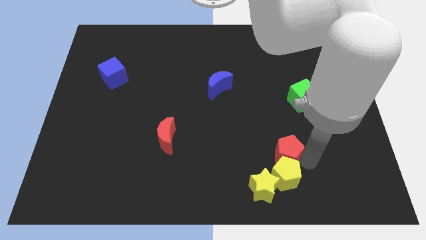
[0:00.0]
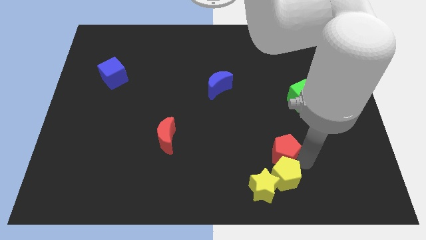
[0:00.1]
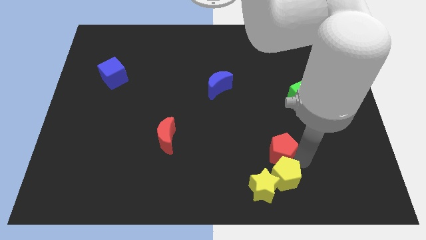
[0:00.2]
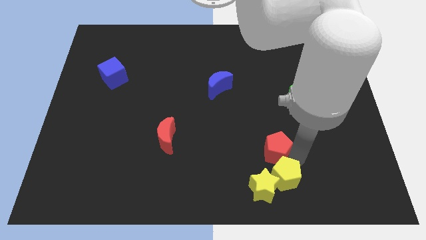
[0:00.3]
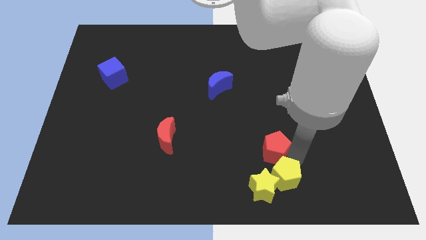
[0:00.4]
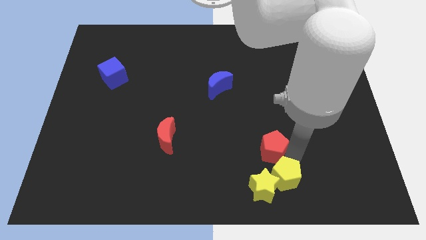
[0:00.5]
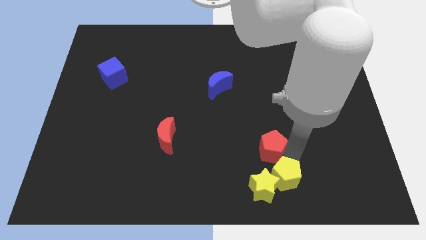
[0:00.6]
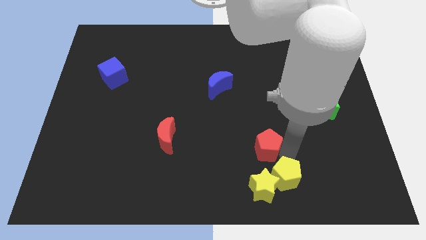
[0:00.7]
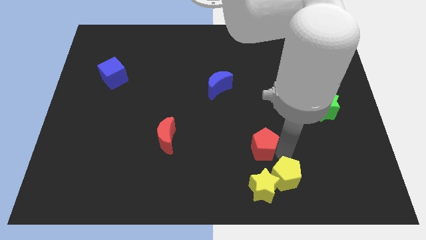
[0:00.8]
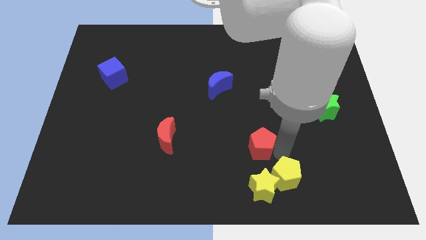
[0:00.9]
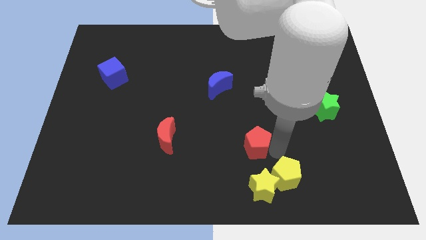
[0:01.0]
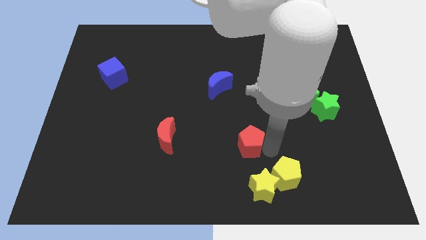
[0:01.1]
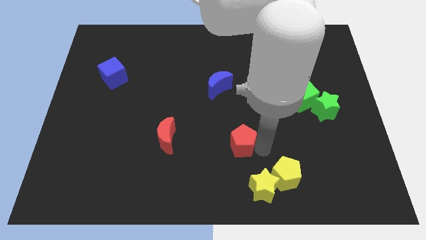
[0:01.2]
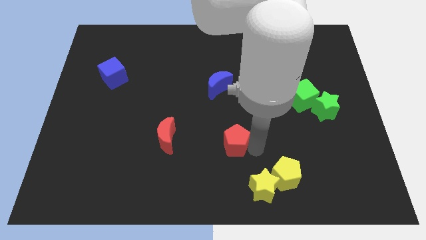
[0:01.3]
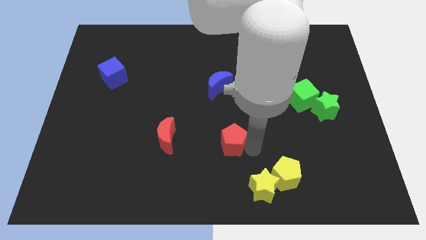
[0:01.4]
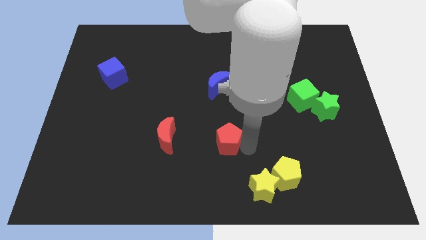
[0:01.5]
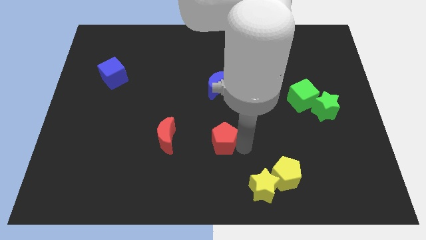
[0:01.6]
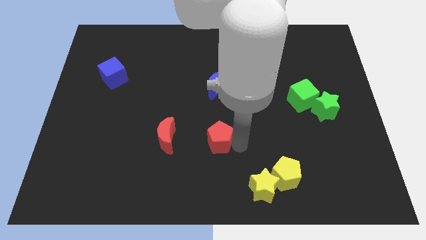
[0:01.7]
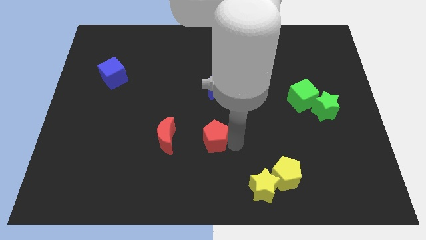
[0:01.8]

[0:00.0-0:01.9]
move the red pentagon away from the yellow pentagon

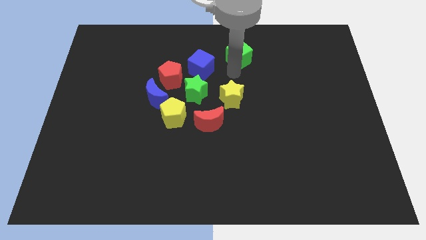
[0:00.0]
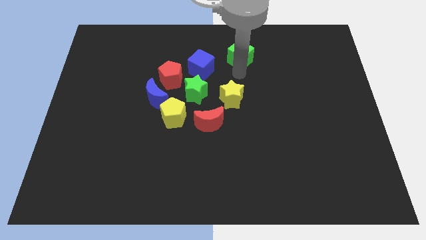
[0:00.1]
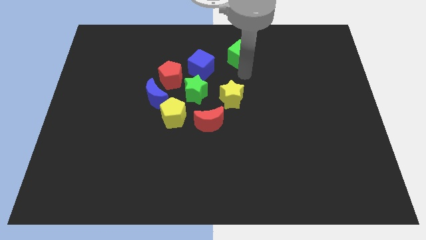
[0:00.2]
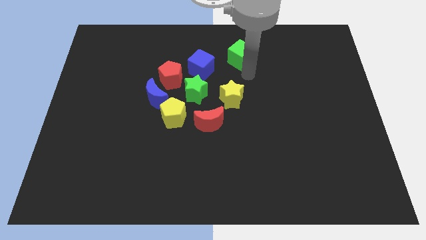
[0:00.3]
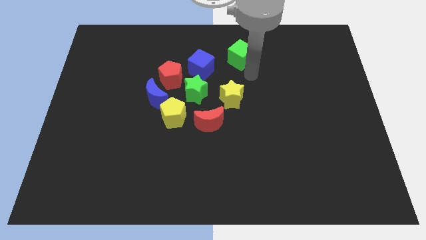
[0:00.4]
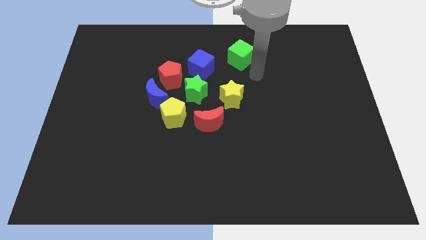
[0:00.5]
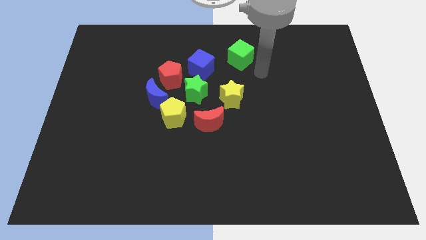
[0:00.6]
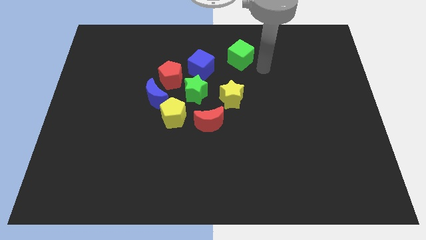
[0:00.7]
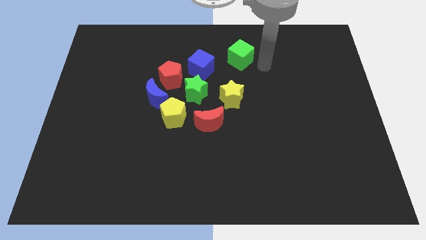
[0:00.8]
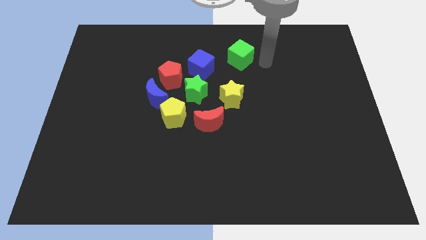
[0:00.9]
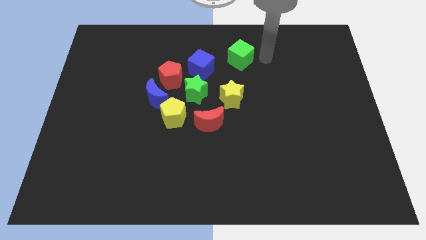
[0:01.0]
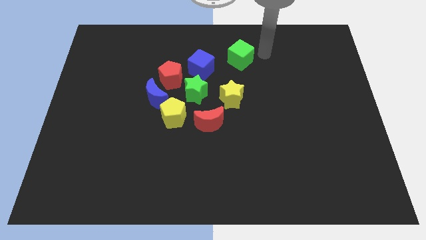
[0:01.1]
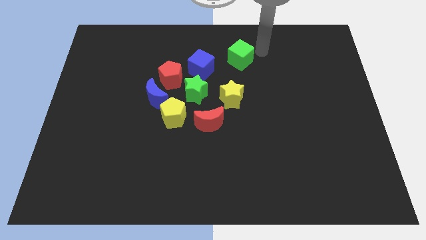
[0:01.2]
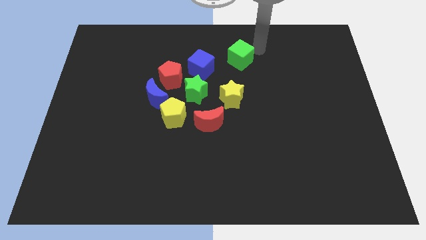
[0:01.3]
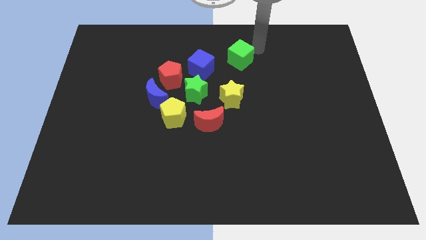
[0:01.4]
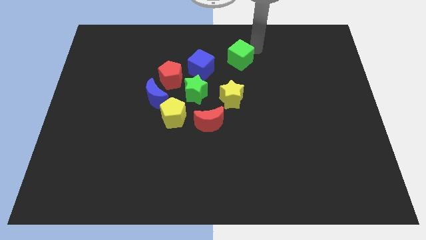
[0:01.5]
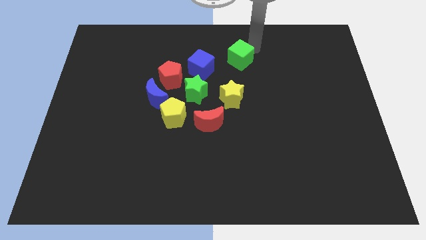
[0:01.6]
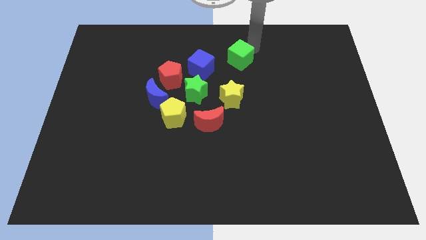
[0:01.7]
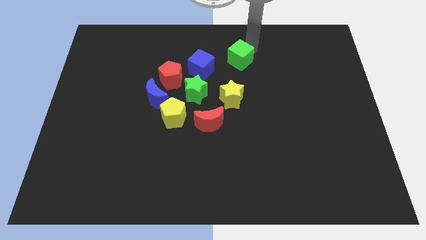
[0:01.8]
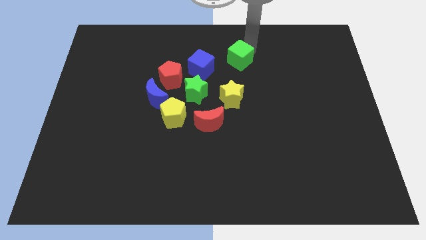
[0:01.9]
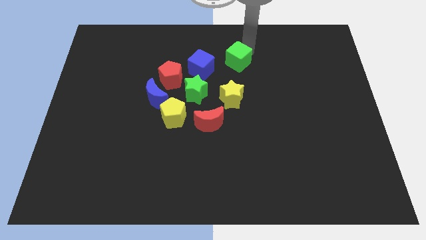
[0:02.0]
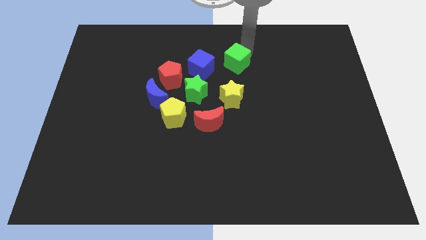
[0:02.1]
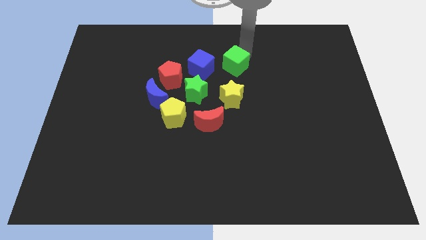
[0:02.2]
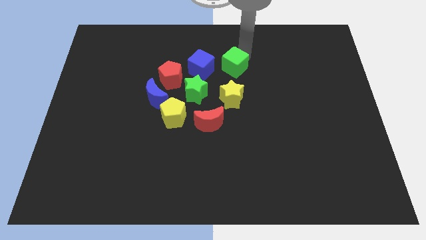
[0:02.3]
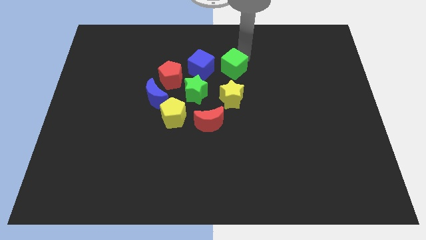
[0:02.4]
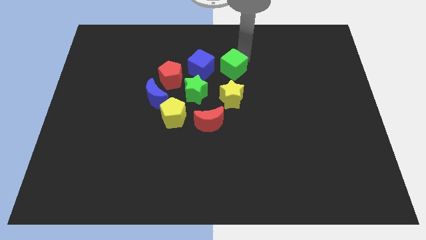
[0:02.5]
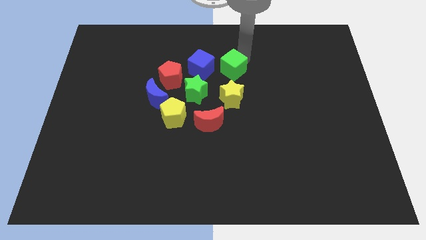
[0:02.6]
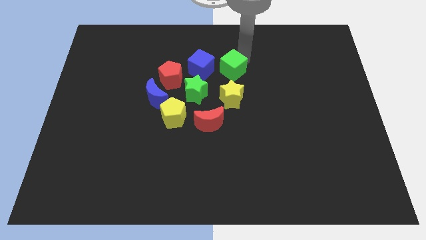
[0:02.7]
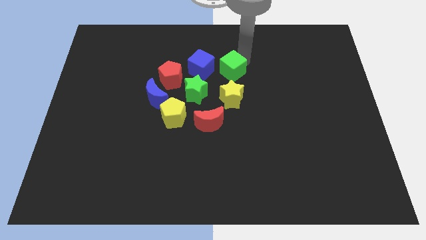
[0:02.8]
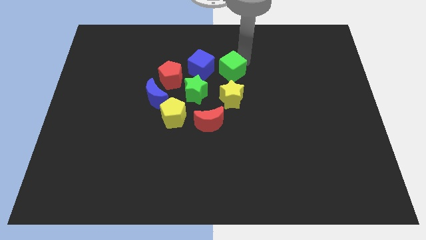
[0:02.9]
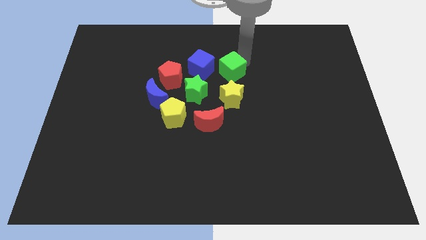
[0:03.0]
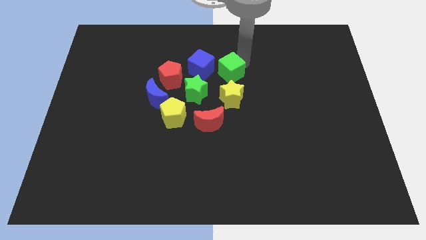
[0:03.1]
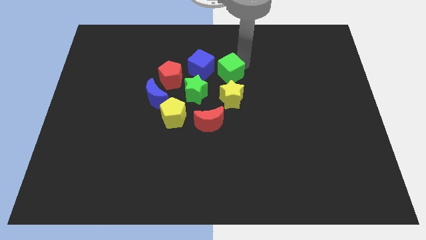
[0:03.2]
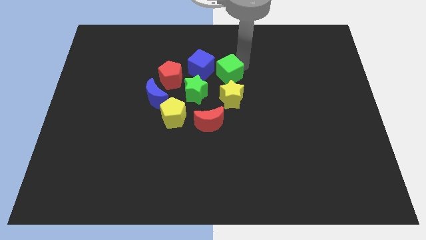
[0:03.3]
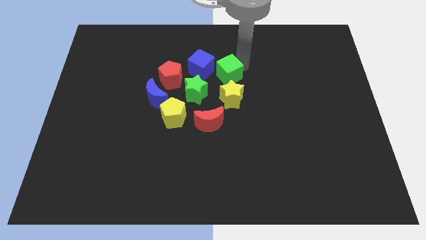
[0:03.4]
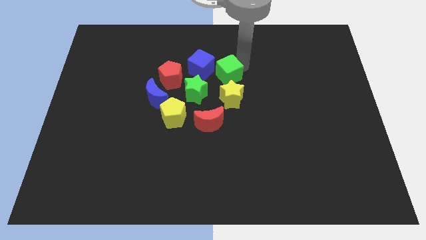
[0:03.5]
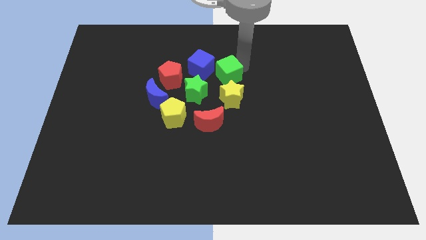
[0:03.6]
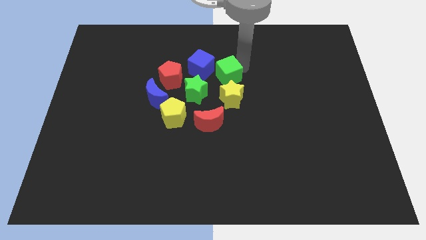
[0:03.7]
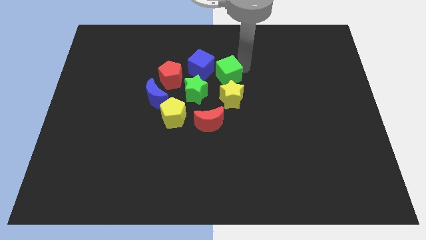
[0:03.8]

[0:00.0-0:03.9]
move the green cube close to the right side of the blue cube

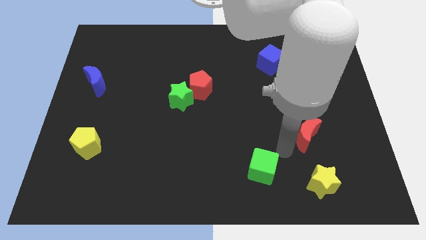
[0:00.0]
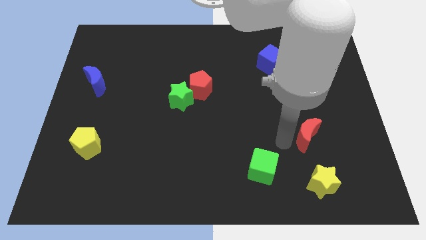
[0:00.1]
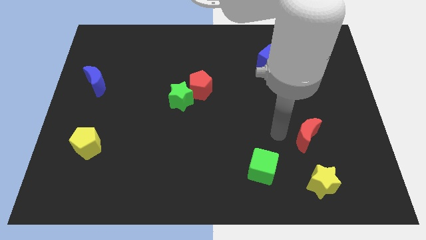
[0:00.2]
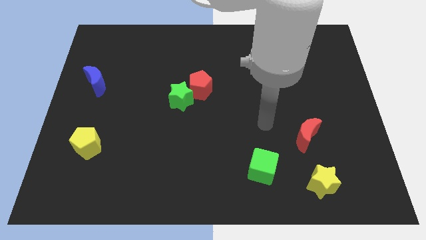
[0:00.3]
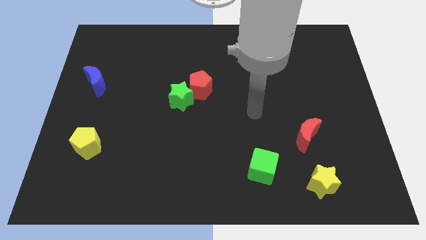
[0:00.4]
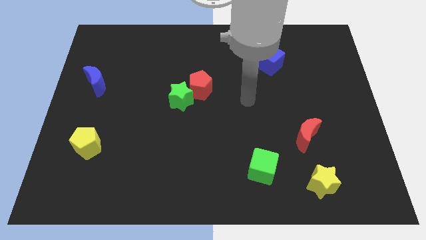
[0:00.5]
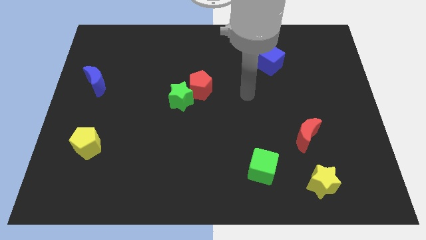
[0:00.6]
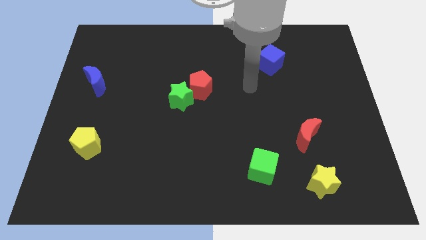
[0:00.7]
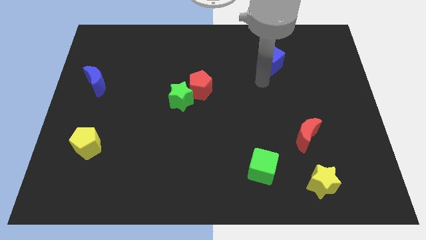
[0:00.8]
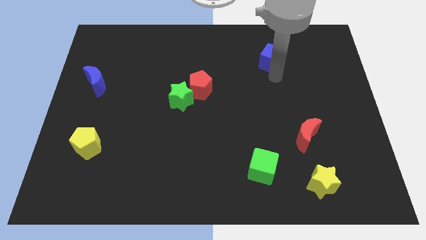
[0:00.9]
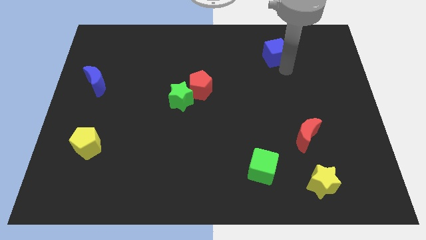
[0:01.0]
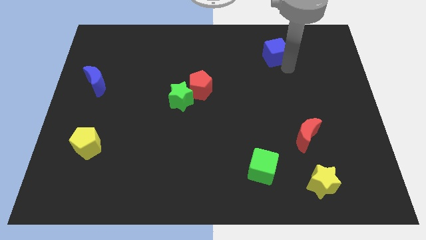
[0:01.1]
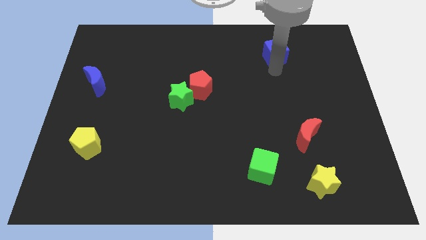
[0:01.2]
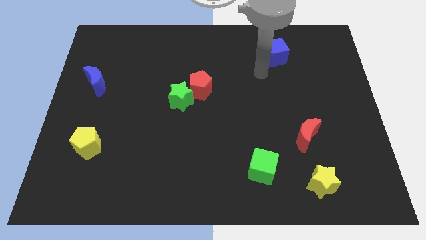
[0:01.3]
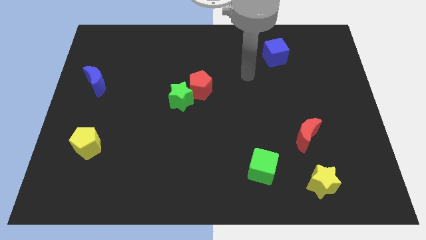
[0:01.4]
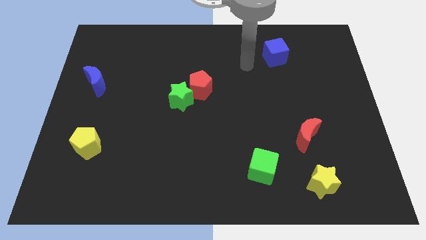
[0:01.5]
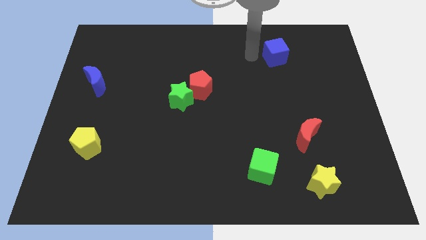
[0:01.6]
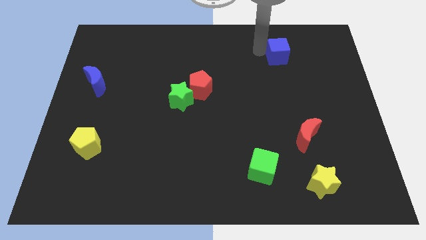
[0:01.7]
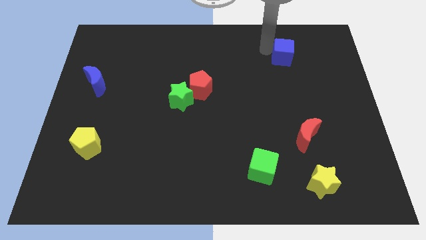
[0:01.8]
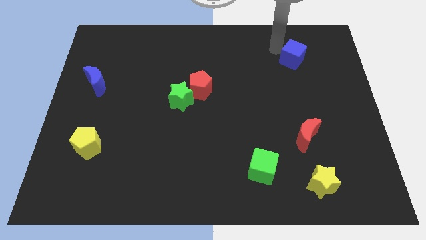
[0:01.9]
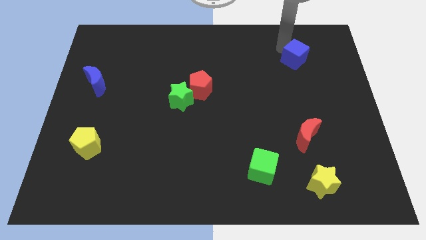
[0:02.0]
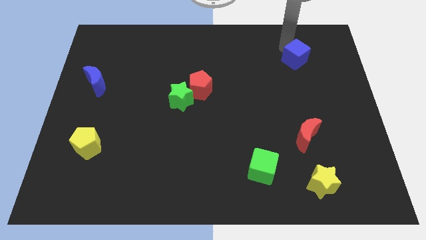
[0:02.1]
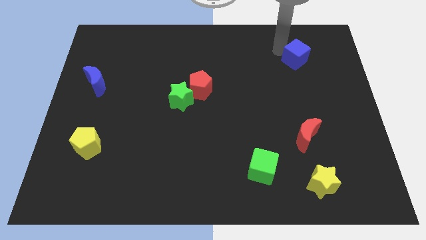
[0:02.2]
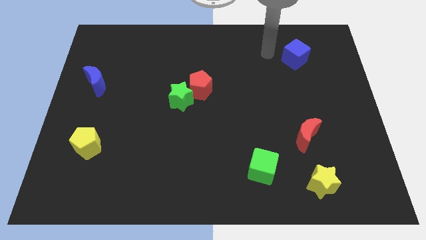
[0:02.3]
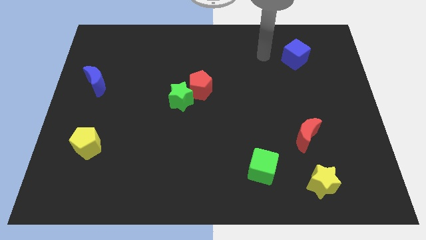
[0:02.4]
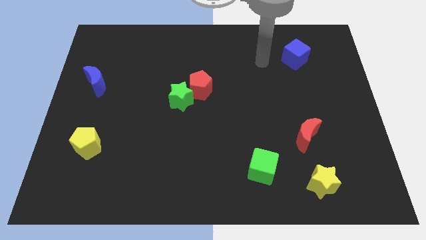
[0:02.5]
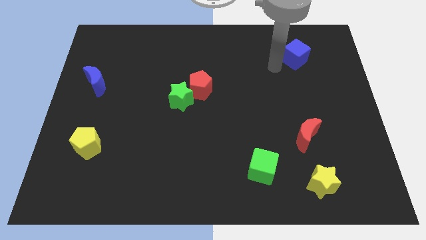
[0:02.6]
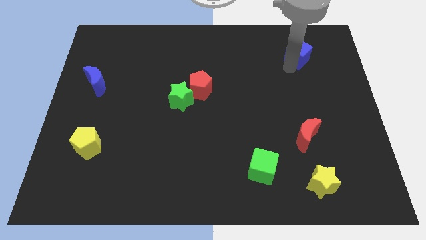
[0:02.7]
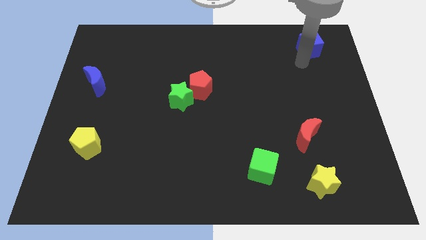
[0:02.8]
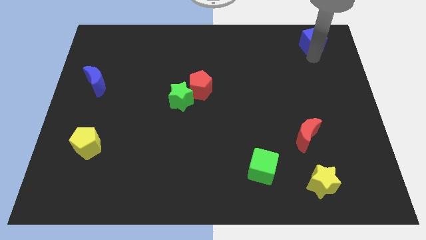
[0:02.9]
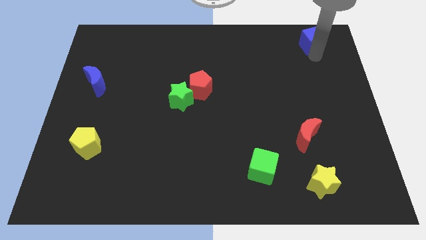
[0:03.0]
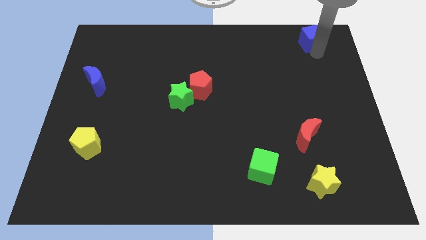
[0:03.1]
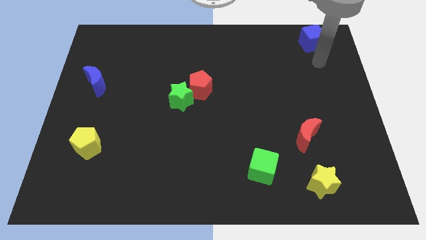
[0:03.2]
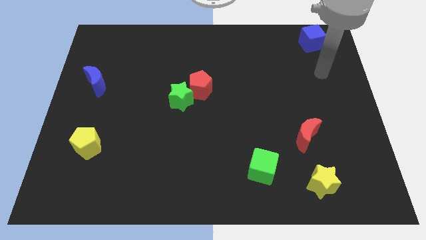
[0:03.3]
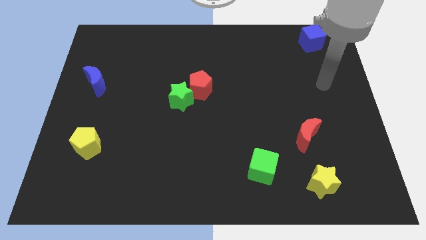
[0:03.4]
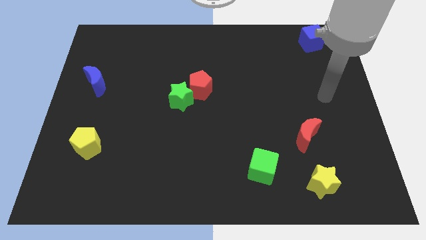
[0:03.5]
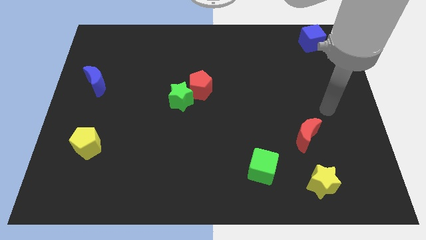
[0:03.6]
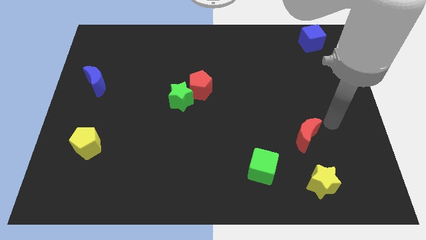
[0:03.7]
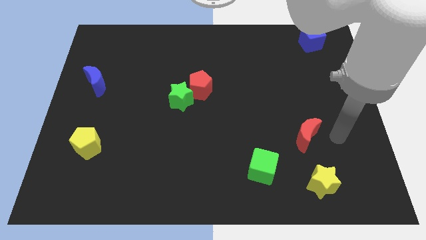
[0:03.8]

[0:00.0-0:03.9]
push the blue cube towards the top corner of the board
